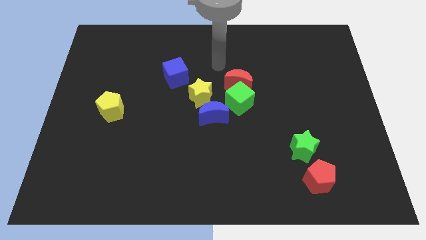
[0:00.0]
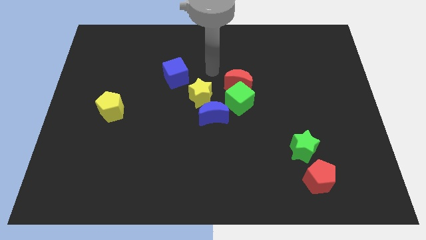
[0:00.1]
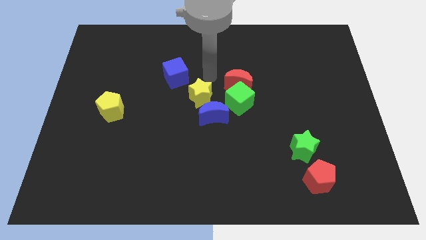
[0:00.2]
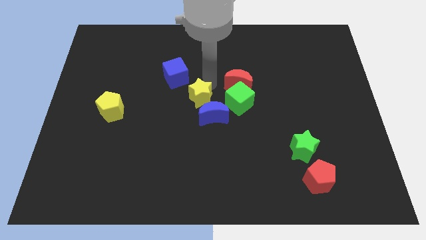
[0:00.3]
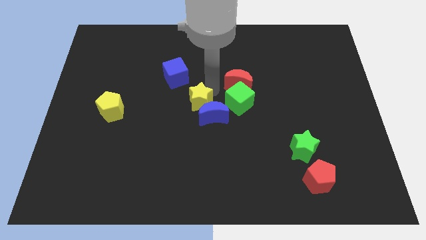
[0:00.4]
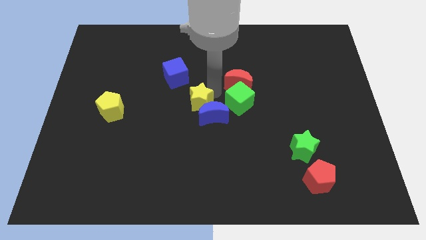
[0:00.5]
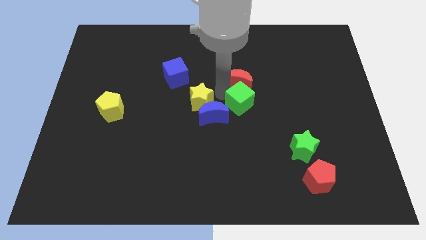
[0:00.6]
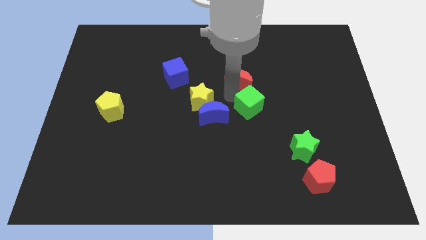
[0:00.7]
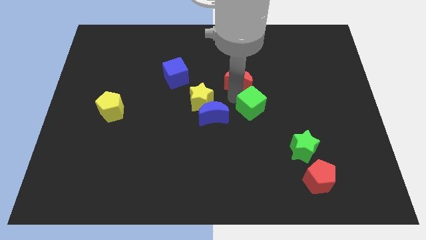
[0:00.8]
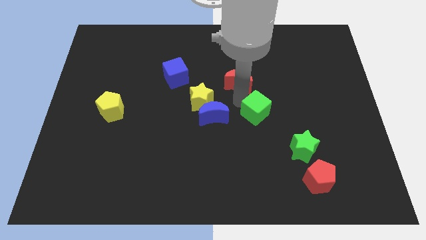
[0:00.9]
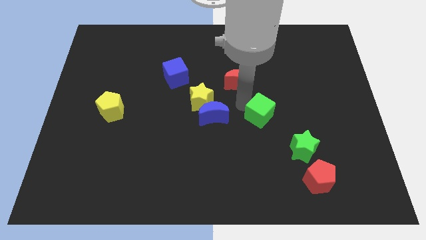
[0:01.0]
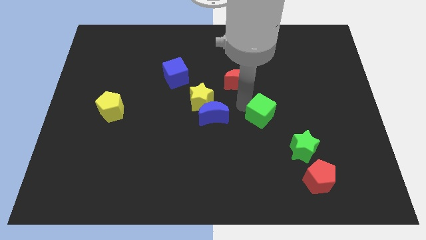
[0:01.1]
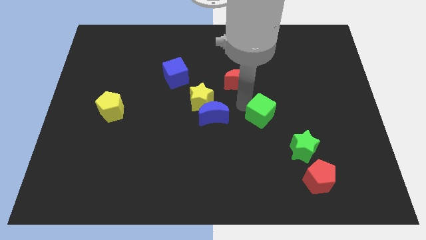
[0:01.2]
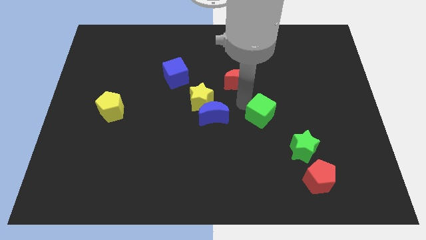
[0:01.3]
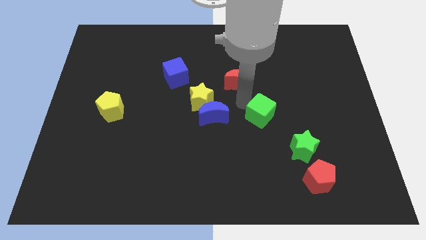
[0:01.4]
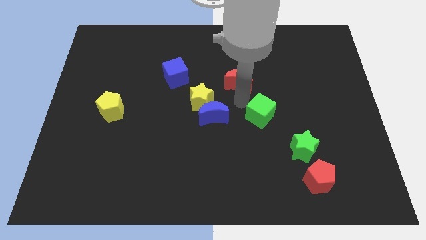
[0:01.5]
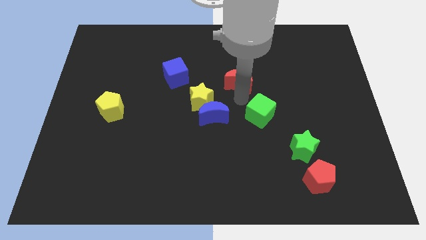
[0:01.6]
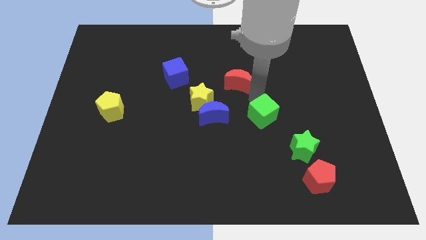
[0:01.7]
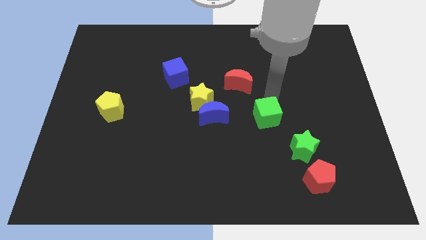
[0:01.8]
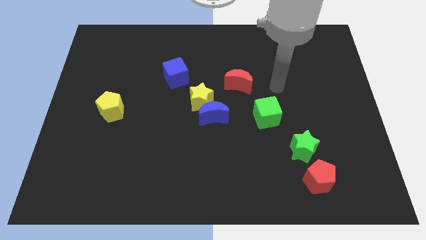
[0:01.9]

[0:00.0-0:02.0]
separate the green cube from the red crescent

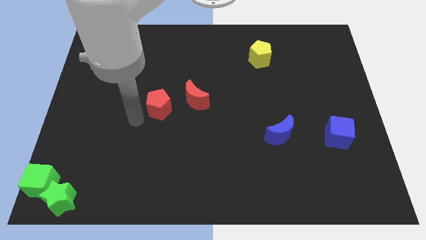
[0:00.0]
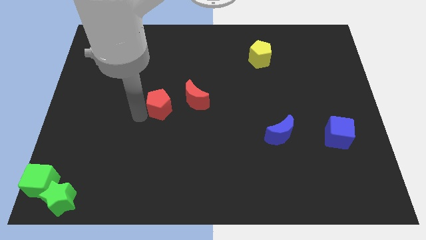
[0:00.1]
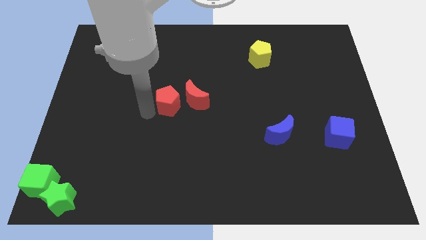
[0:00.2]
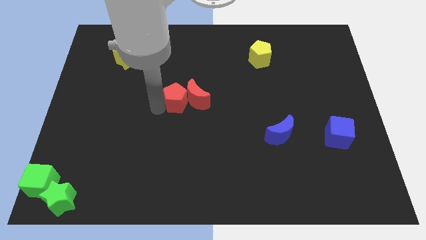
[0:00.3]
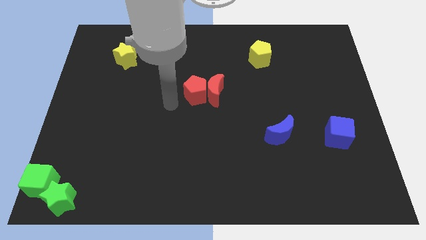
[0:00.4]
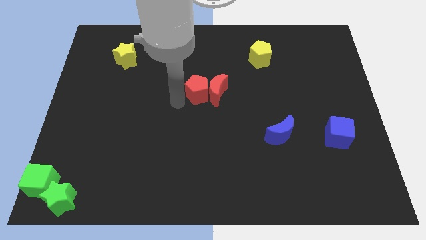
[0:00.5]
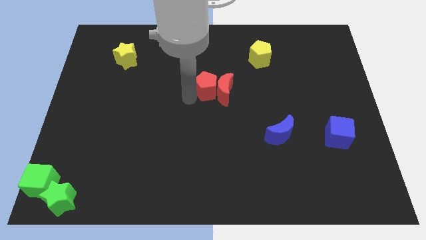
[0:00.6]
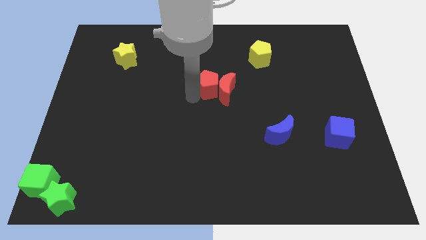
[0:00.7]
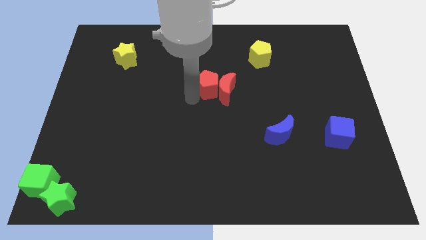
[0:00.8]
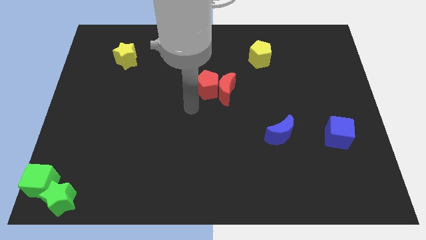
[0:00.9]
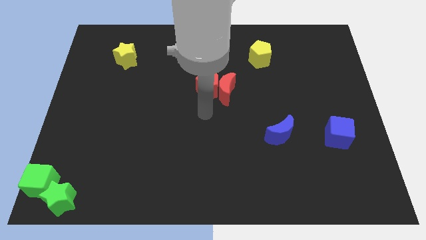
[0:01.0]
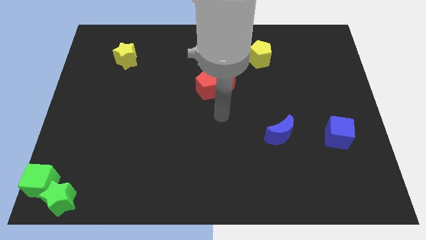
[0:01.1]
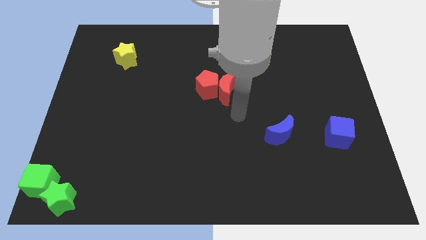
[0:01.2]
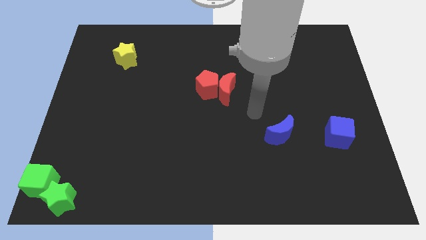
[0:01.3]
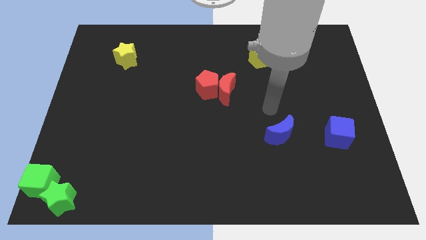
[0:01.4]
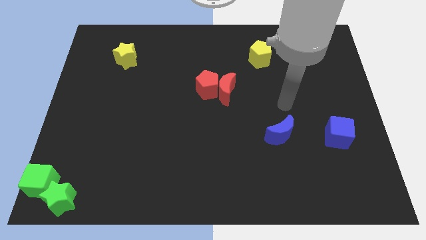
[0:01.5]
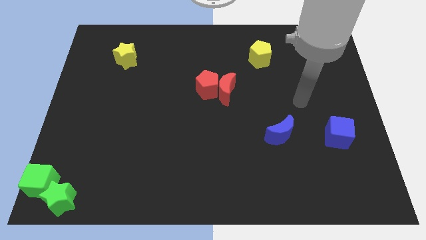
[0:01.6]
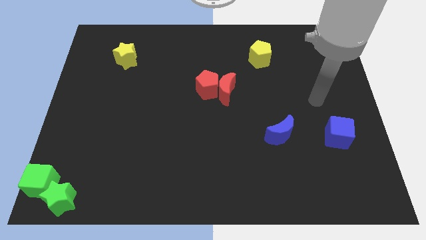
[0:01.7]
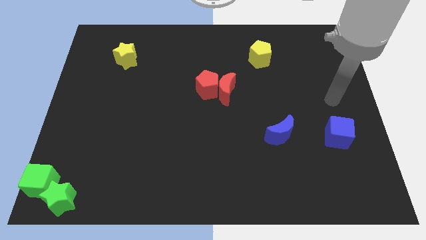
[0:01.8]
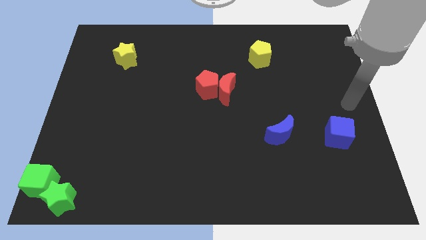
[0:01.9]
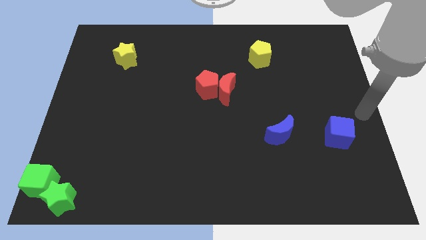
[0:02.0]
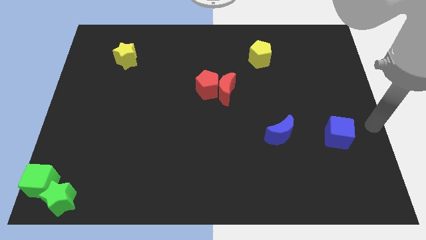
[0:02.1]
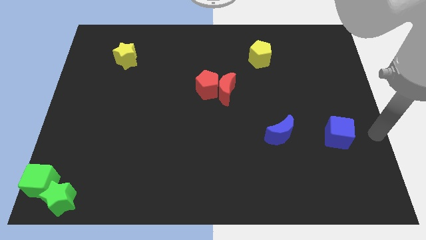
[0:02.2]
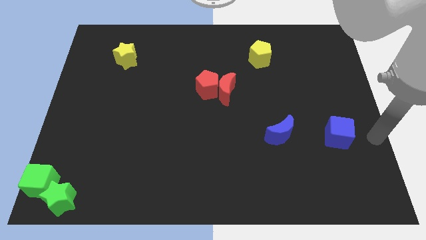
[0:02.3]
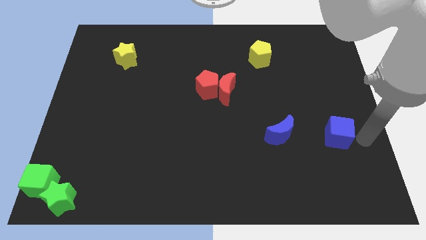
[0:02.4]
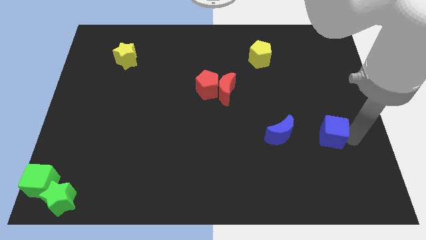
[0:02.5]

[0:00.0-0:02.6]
push red pentagon into red moon to center of the board

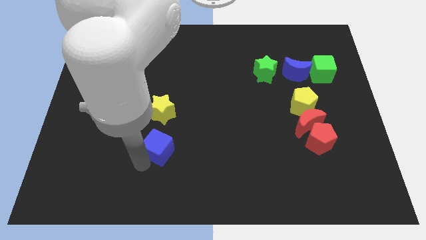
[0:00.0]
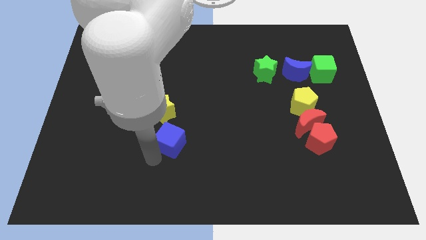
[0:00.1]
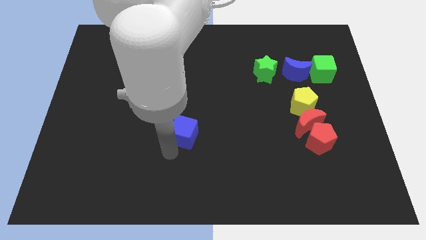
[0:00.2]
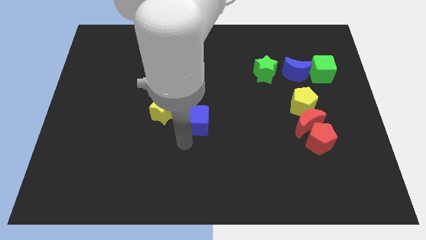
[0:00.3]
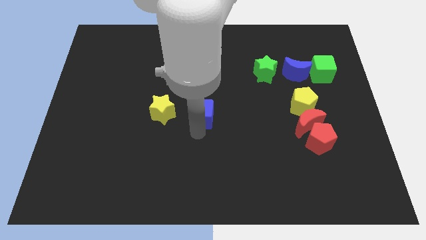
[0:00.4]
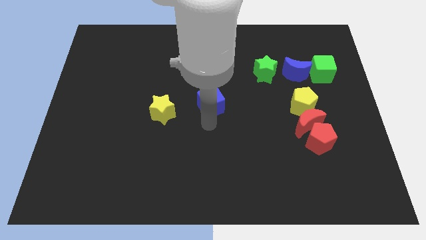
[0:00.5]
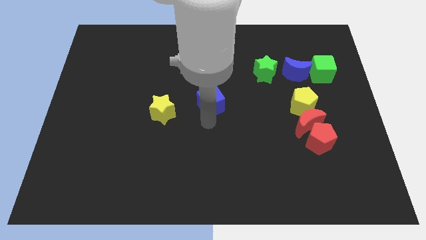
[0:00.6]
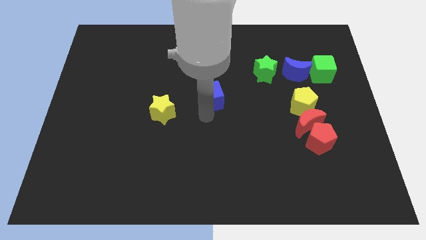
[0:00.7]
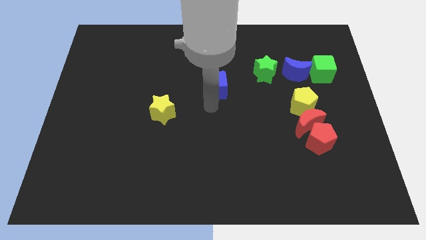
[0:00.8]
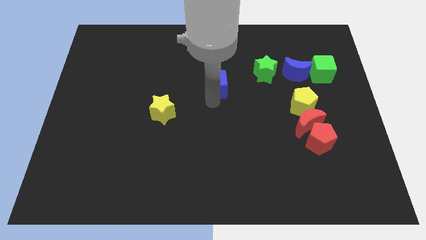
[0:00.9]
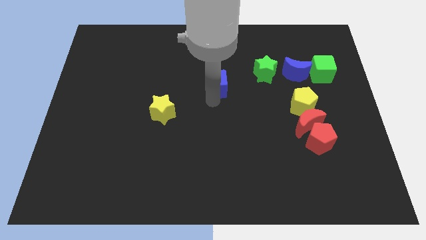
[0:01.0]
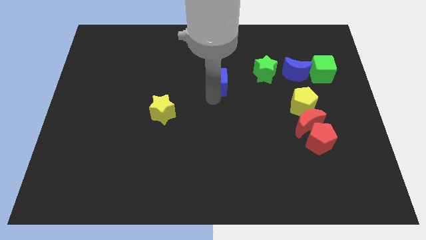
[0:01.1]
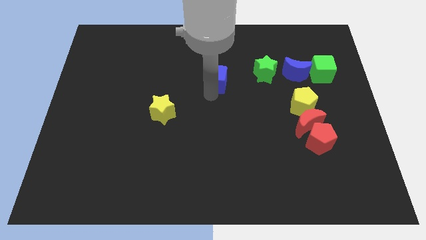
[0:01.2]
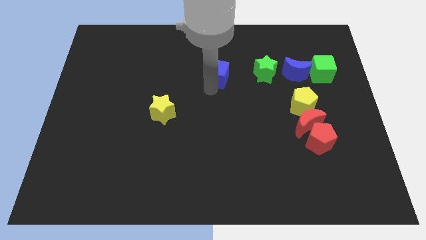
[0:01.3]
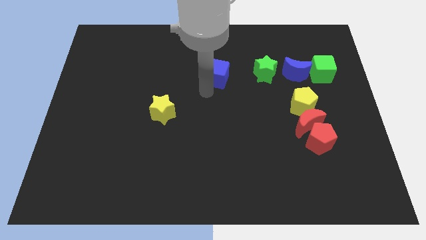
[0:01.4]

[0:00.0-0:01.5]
push the blue cube towards the top center of the board

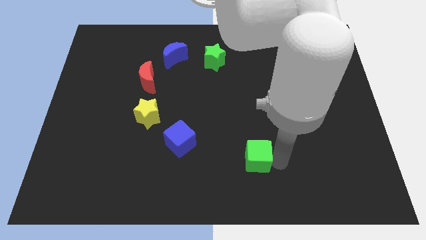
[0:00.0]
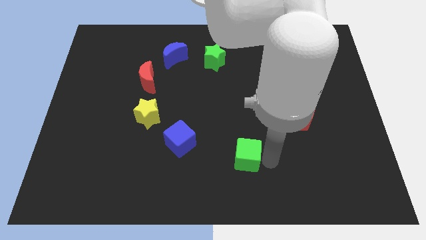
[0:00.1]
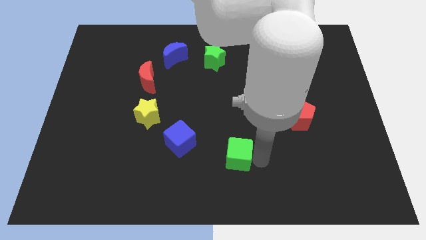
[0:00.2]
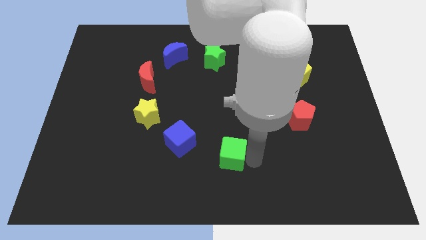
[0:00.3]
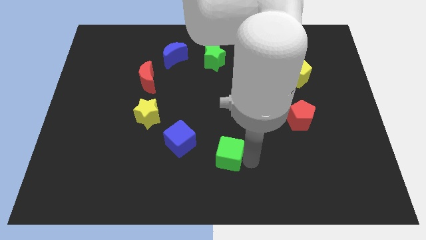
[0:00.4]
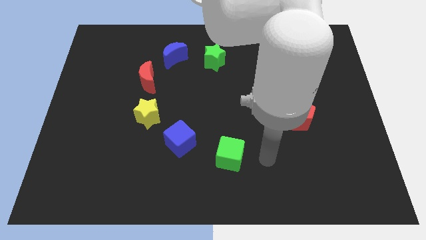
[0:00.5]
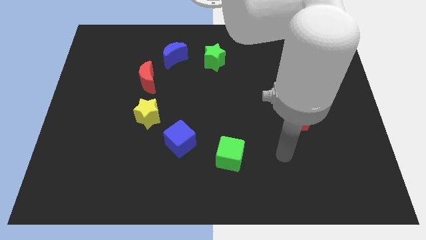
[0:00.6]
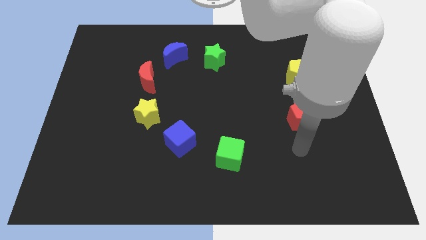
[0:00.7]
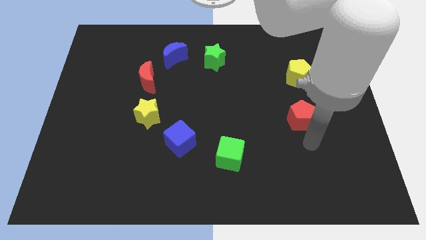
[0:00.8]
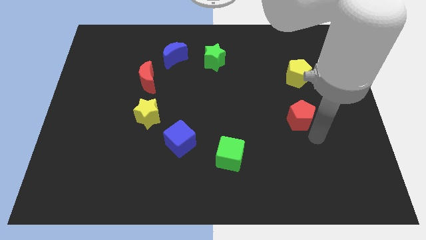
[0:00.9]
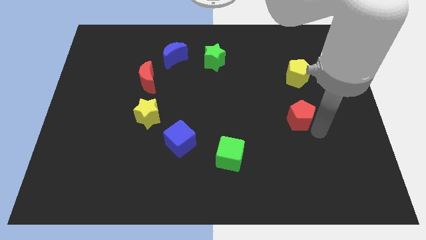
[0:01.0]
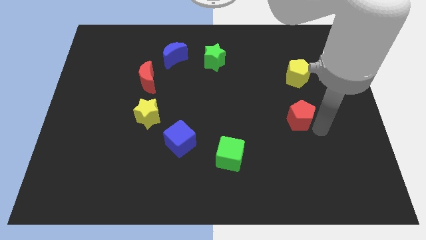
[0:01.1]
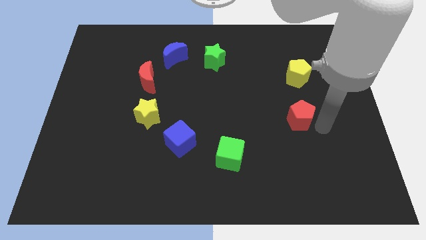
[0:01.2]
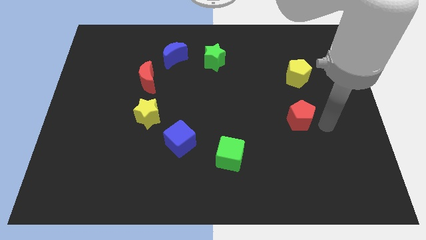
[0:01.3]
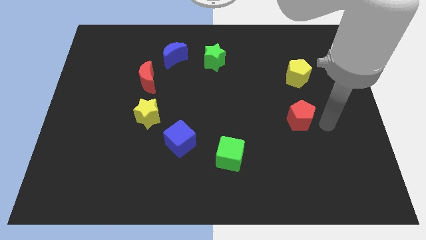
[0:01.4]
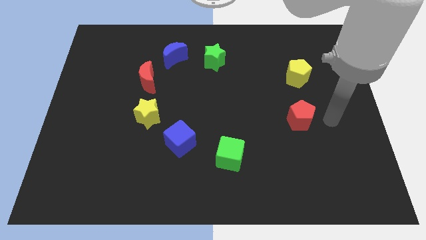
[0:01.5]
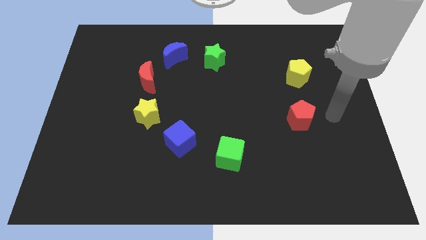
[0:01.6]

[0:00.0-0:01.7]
slide the green cube slightly to the left side of the board

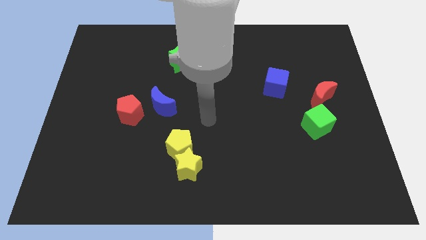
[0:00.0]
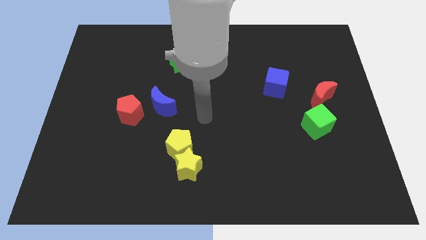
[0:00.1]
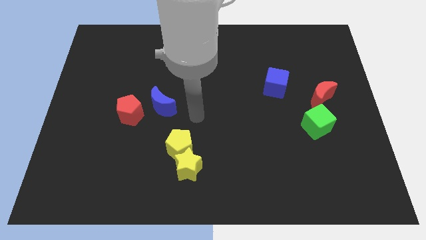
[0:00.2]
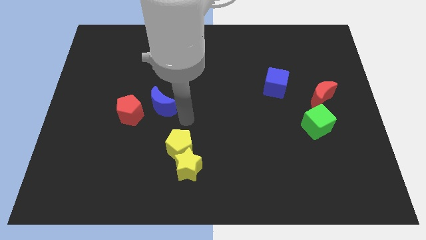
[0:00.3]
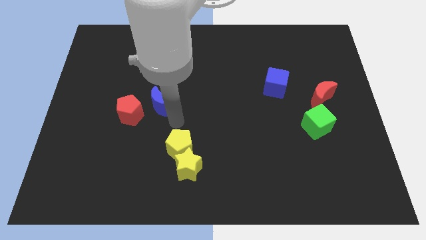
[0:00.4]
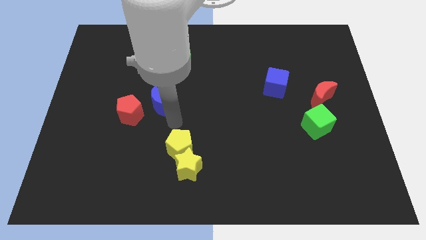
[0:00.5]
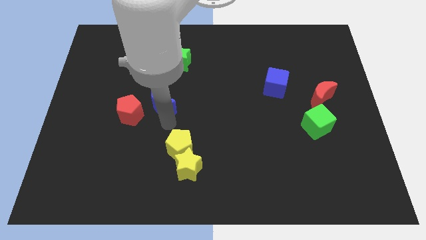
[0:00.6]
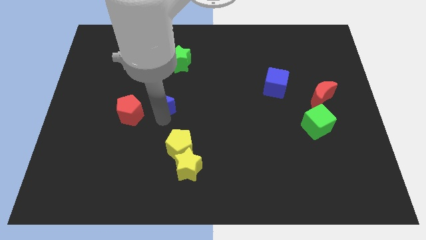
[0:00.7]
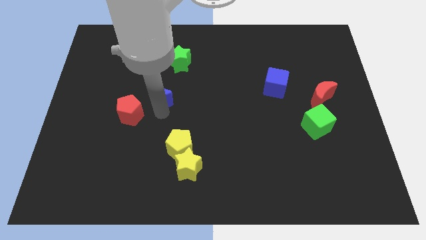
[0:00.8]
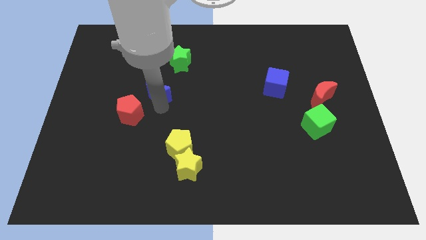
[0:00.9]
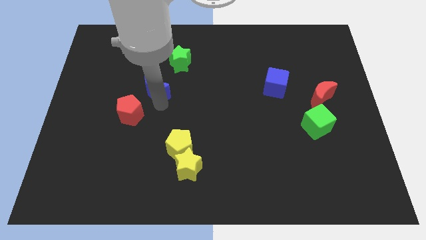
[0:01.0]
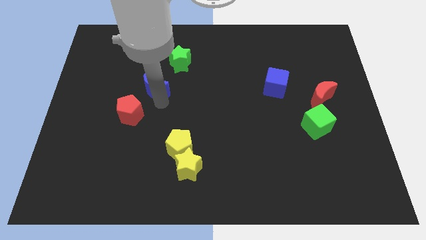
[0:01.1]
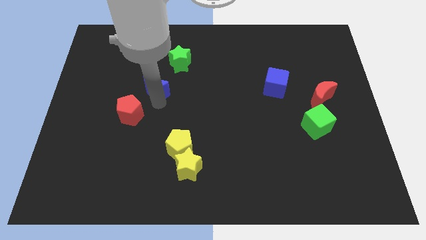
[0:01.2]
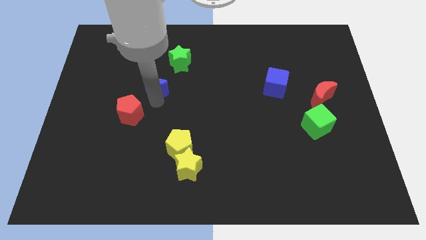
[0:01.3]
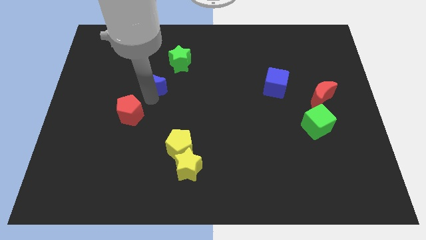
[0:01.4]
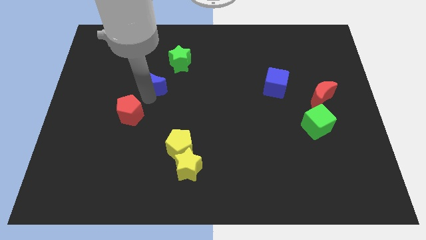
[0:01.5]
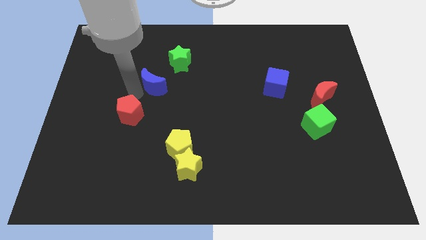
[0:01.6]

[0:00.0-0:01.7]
place blue moon to the top right of red pentagon
